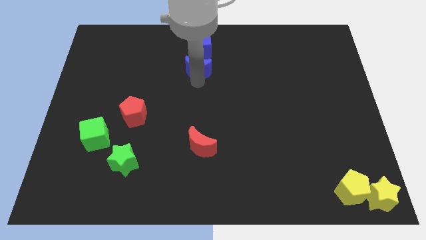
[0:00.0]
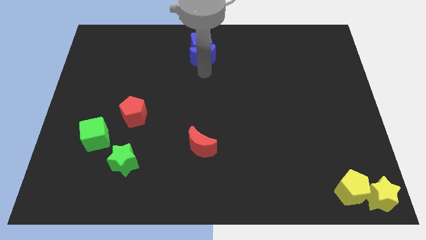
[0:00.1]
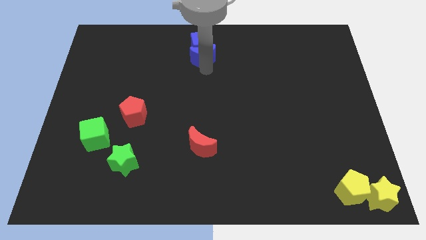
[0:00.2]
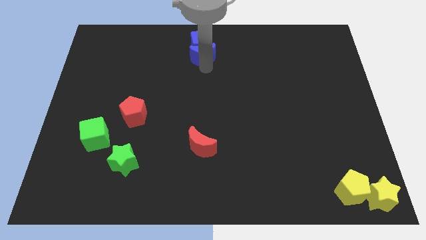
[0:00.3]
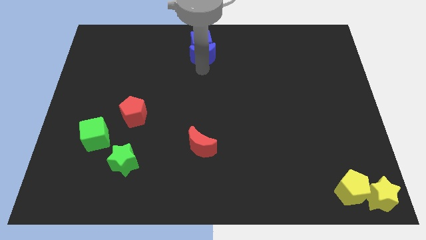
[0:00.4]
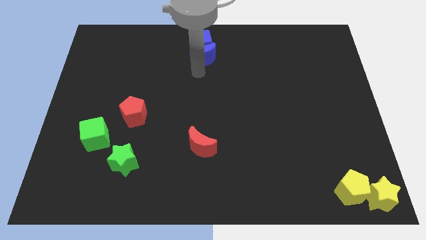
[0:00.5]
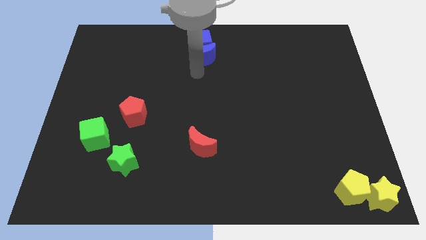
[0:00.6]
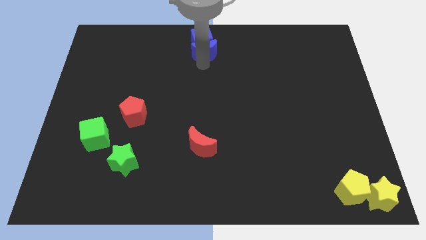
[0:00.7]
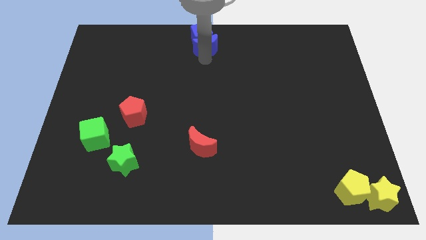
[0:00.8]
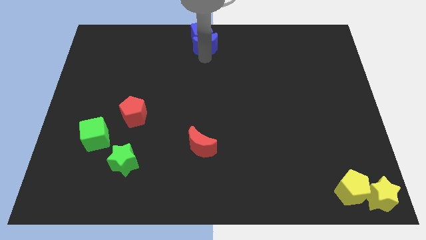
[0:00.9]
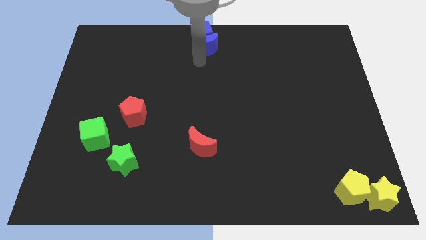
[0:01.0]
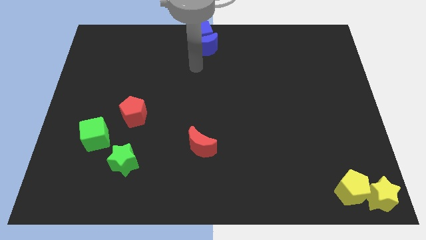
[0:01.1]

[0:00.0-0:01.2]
push the blue moon close to the blue cube

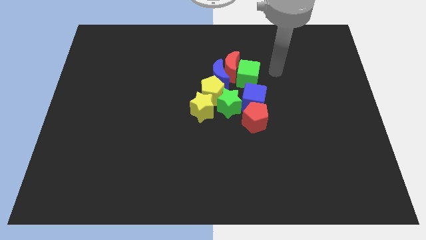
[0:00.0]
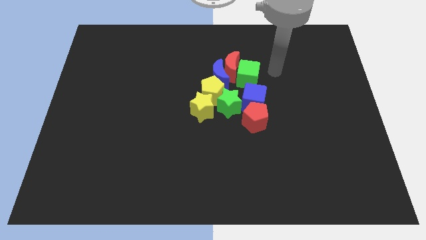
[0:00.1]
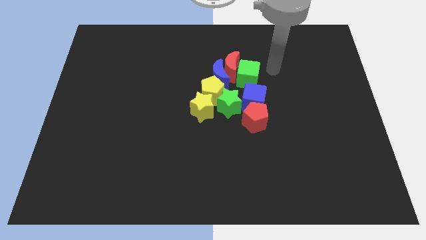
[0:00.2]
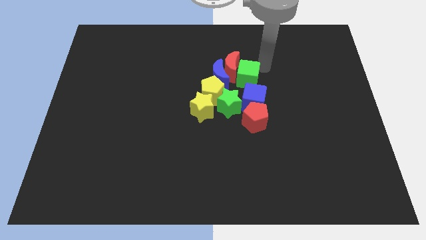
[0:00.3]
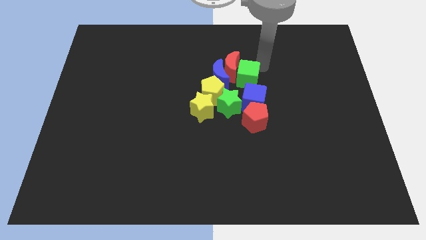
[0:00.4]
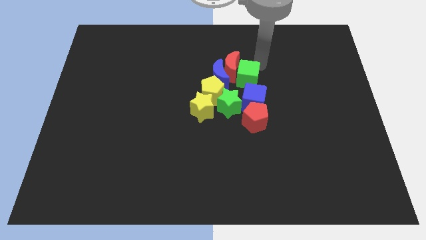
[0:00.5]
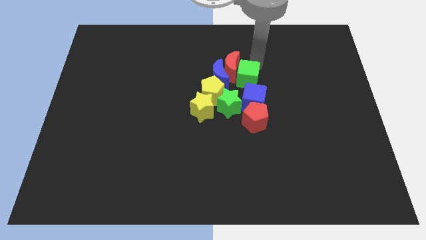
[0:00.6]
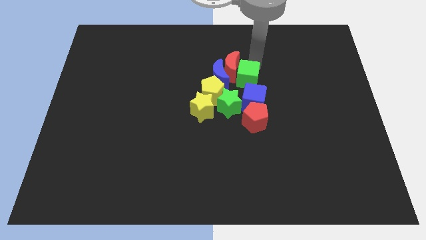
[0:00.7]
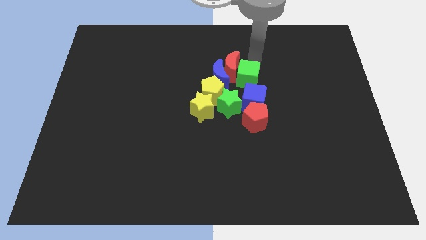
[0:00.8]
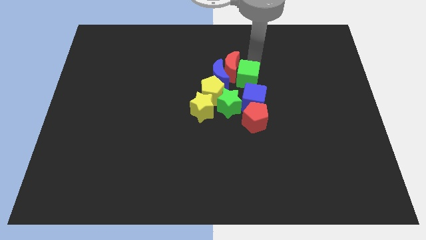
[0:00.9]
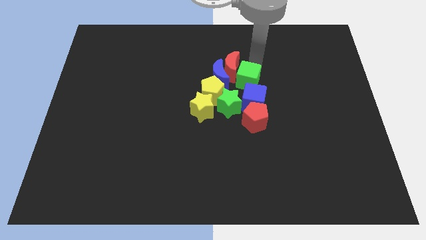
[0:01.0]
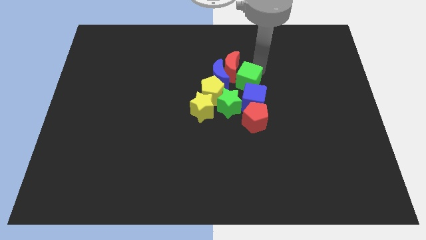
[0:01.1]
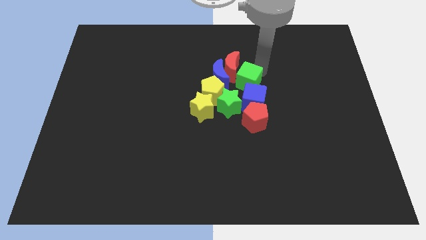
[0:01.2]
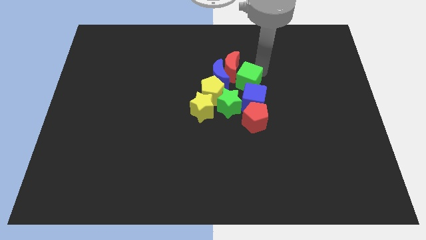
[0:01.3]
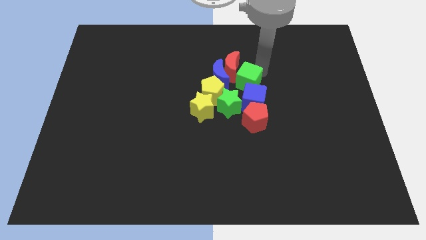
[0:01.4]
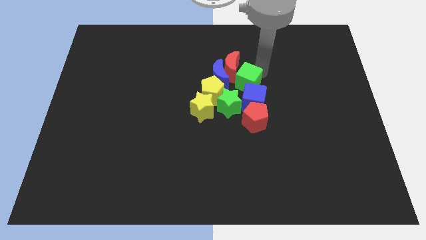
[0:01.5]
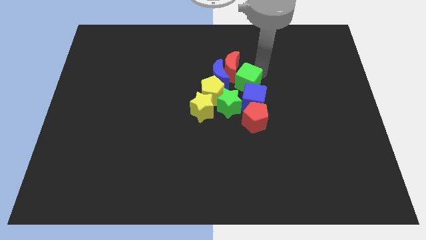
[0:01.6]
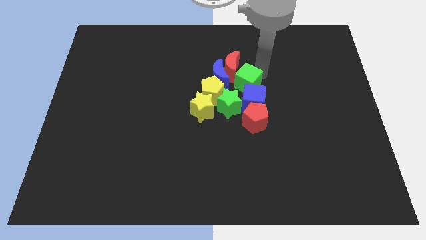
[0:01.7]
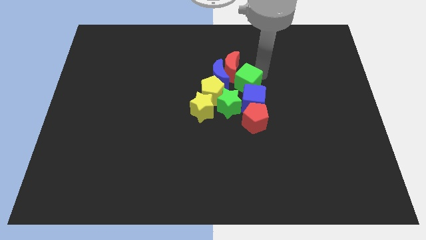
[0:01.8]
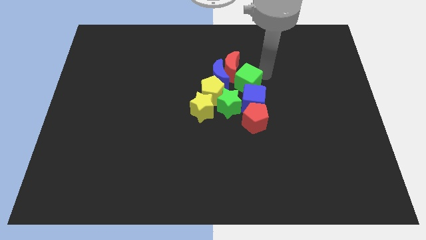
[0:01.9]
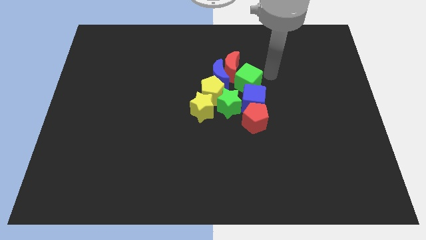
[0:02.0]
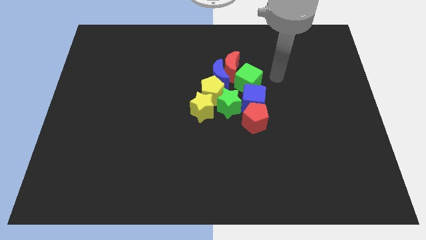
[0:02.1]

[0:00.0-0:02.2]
push the green cube into a group of blocks

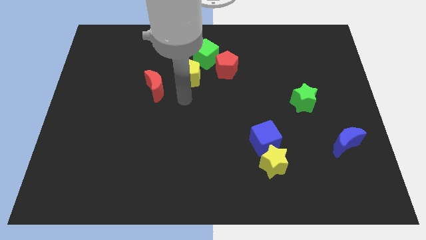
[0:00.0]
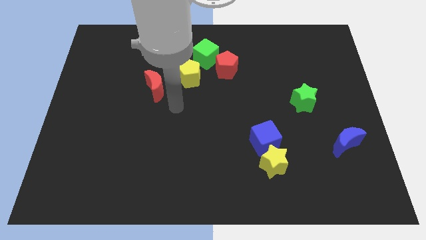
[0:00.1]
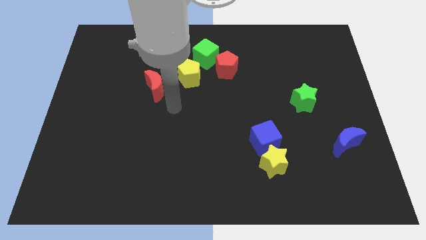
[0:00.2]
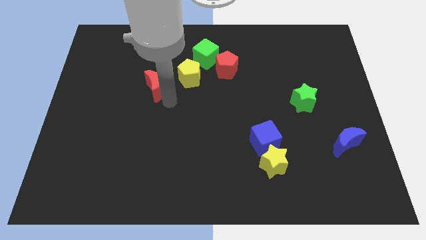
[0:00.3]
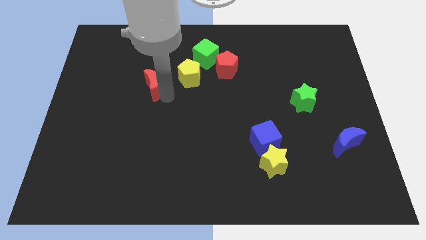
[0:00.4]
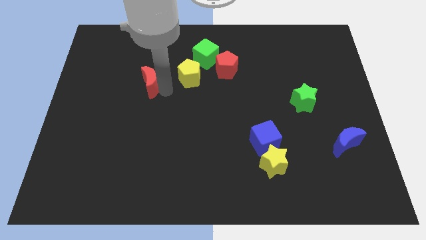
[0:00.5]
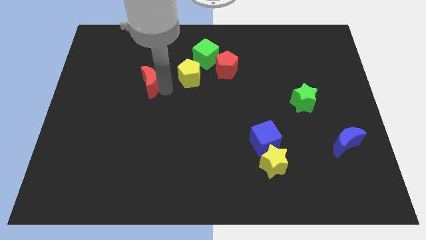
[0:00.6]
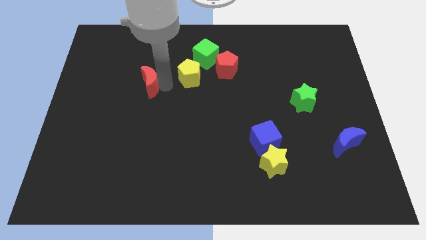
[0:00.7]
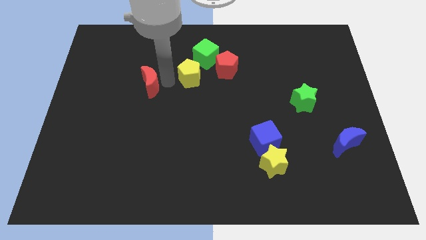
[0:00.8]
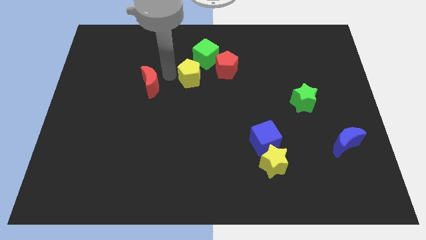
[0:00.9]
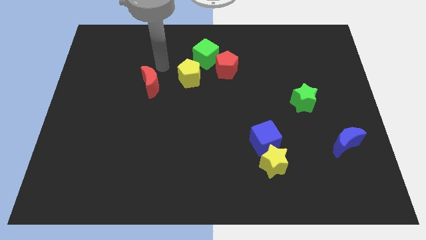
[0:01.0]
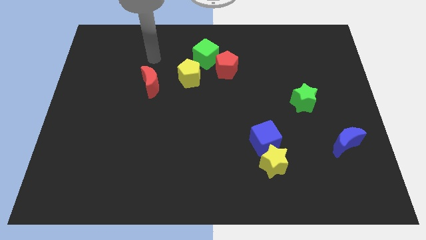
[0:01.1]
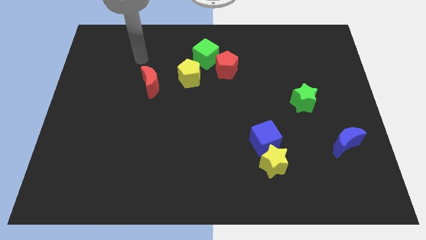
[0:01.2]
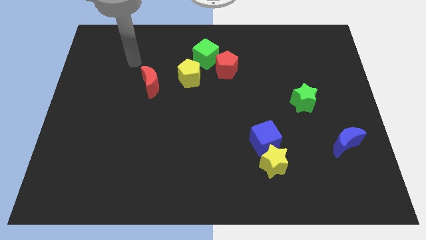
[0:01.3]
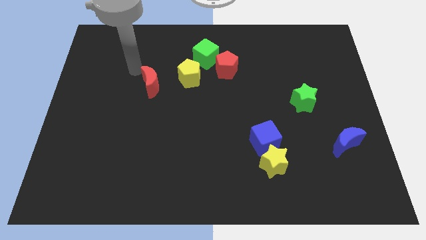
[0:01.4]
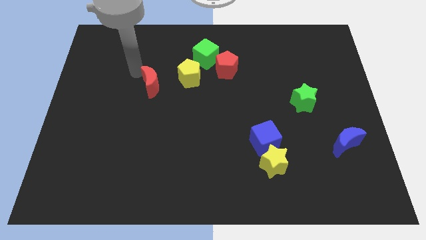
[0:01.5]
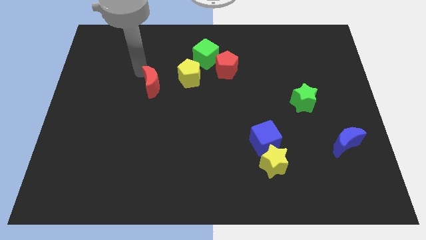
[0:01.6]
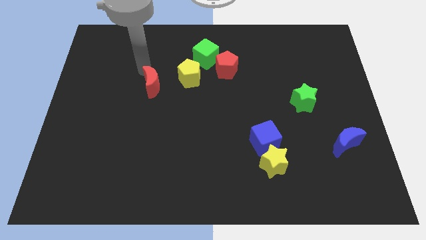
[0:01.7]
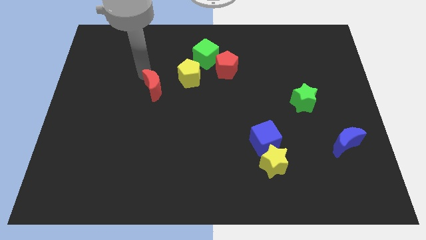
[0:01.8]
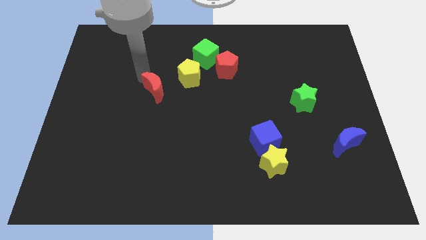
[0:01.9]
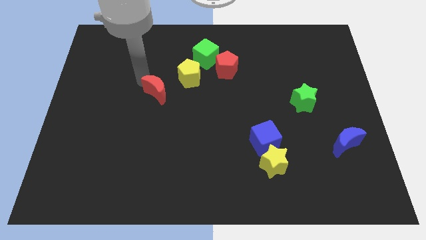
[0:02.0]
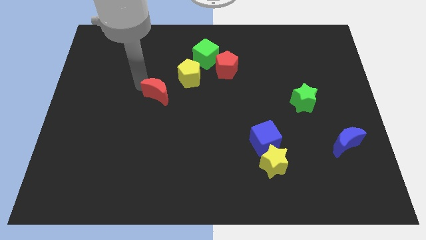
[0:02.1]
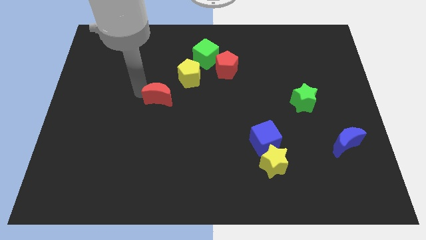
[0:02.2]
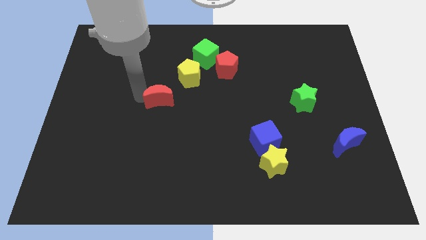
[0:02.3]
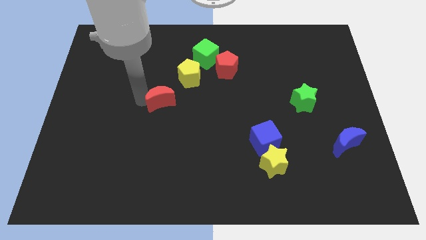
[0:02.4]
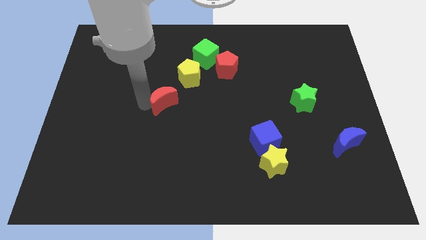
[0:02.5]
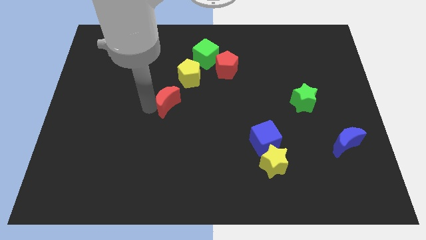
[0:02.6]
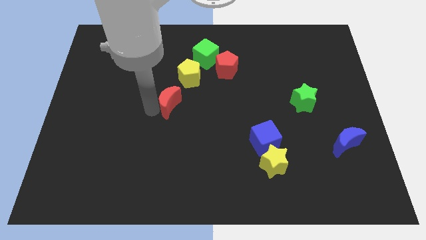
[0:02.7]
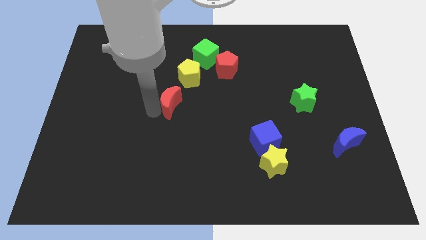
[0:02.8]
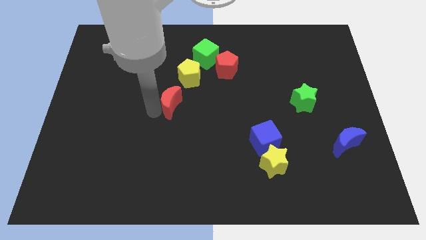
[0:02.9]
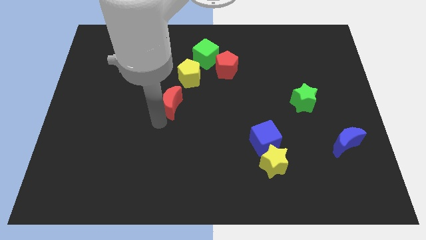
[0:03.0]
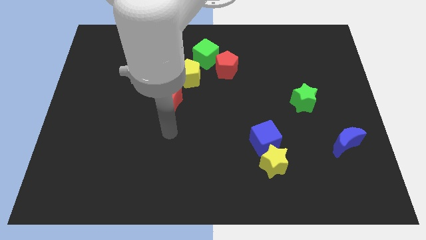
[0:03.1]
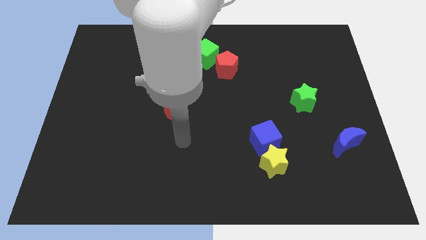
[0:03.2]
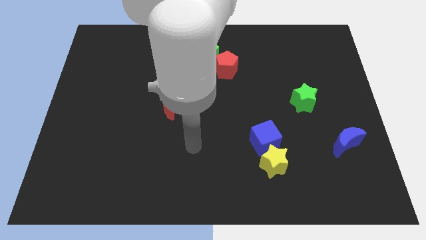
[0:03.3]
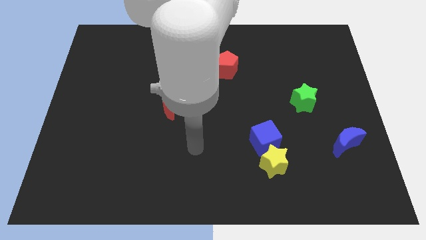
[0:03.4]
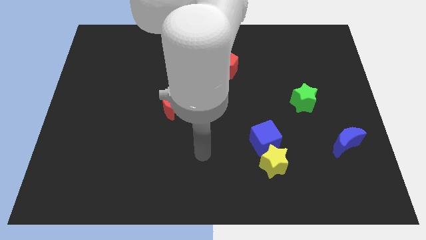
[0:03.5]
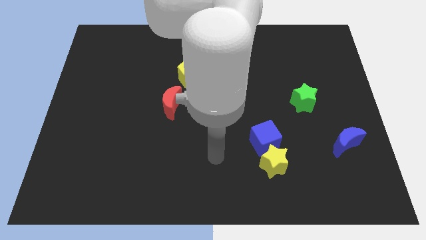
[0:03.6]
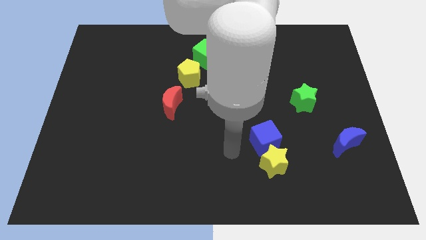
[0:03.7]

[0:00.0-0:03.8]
push the red moon downwards slightly

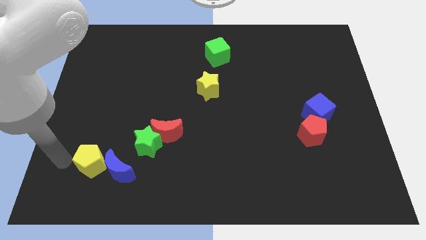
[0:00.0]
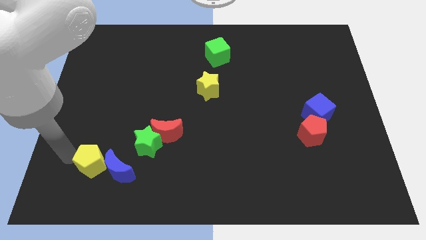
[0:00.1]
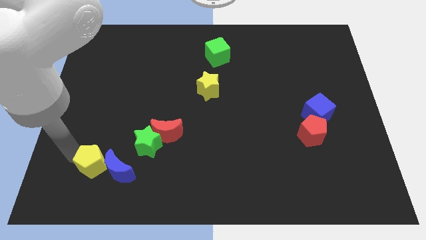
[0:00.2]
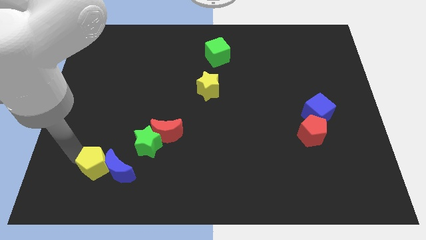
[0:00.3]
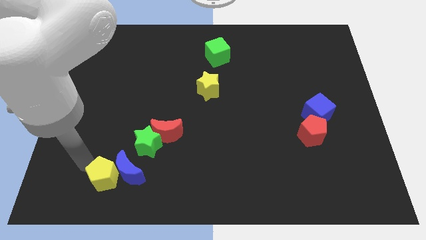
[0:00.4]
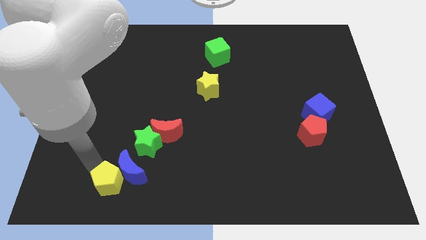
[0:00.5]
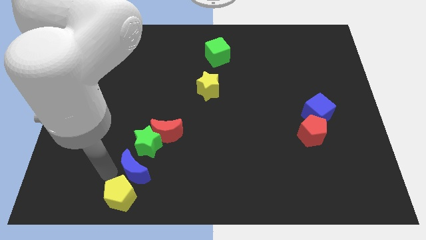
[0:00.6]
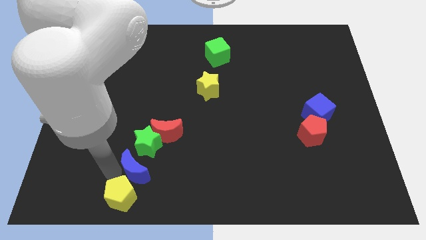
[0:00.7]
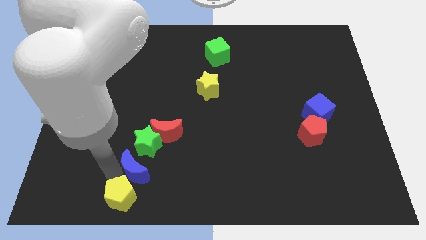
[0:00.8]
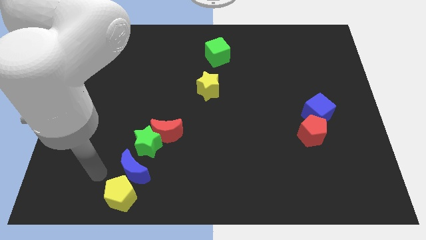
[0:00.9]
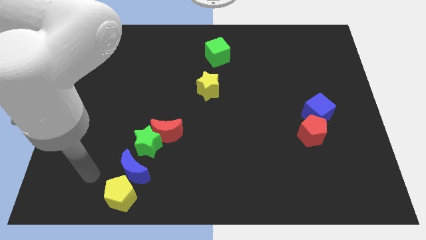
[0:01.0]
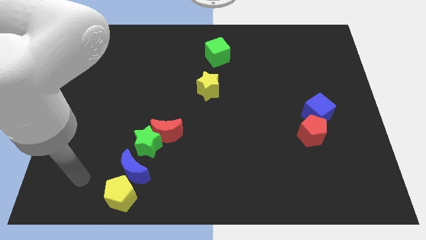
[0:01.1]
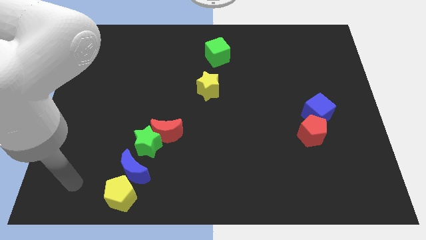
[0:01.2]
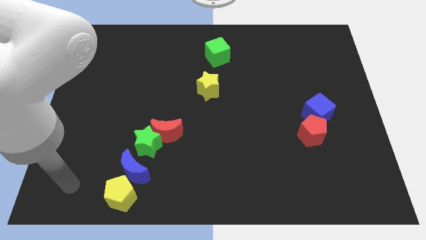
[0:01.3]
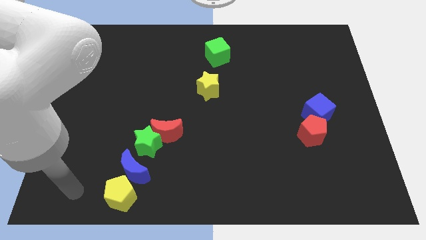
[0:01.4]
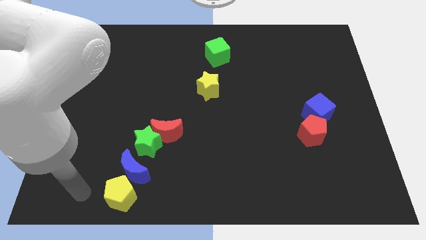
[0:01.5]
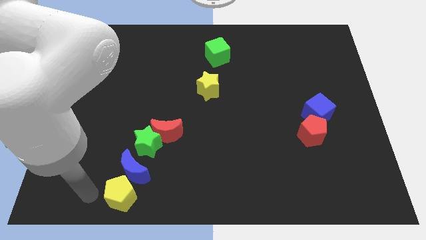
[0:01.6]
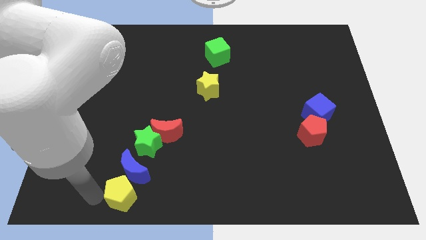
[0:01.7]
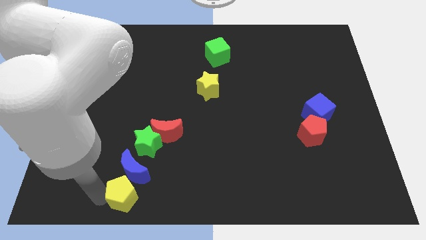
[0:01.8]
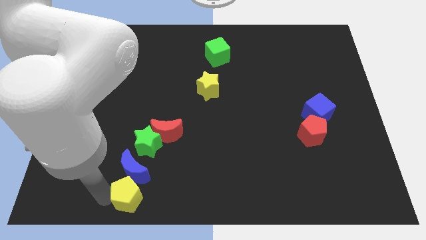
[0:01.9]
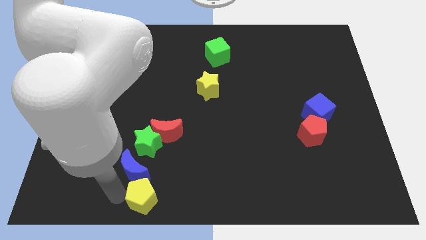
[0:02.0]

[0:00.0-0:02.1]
push the yellow pentagon to the bottom of the blue crescent
